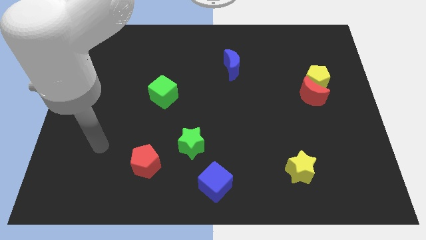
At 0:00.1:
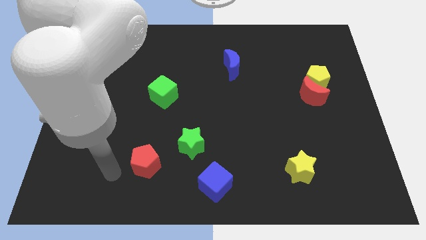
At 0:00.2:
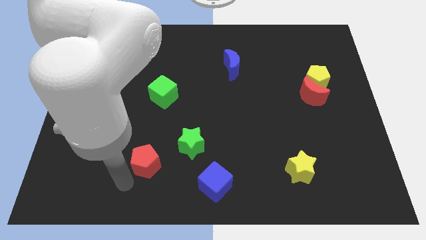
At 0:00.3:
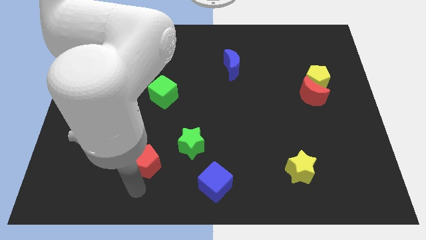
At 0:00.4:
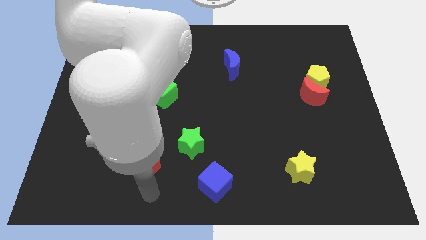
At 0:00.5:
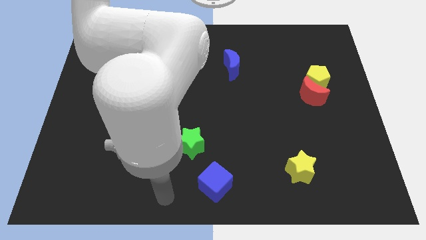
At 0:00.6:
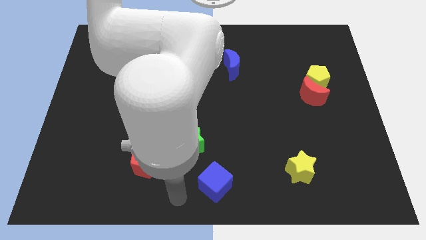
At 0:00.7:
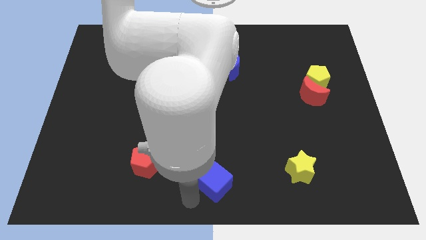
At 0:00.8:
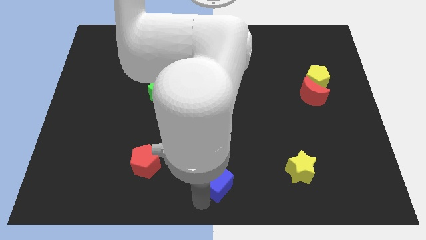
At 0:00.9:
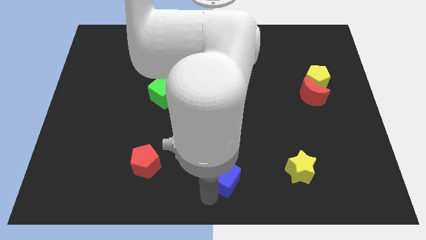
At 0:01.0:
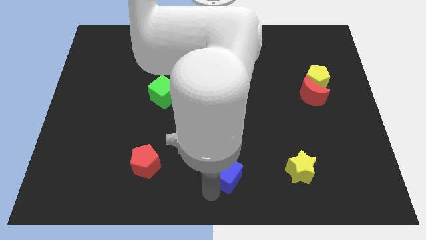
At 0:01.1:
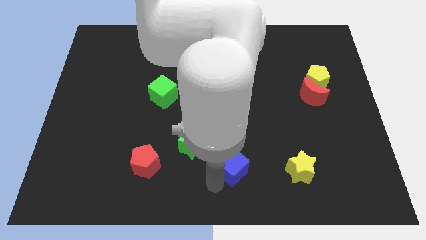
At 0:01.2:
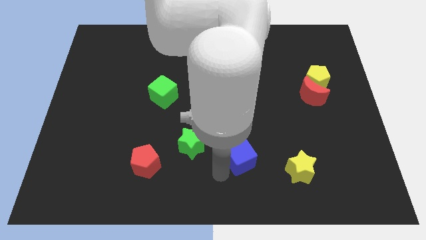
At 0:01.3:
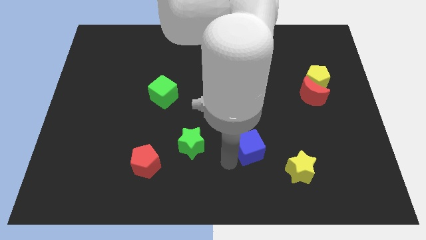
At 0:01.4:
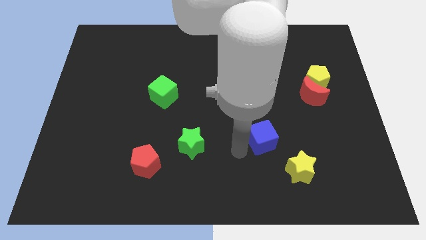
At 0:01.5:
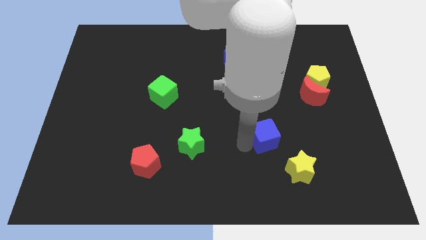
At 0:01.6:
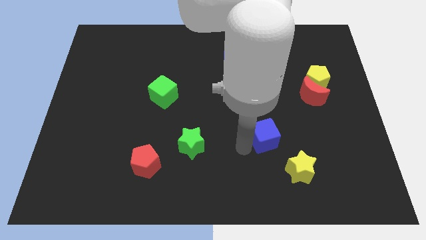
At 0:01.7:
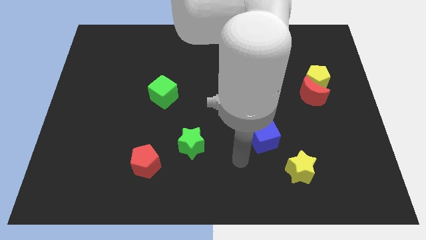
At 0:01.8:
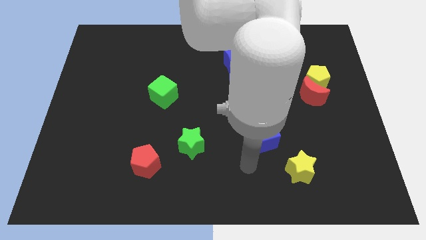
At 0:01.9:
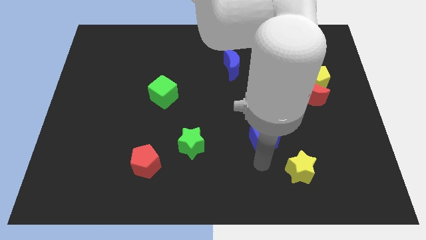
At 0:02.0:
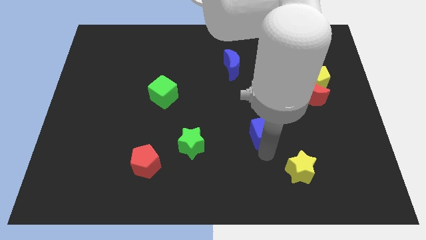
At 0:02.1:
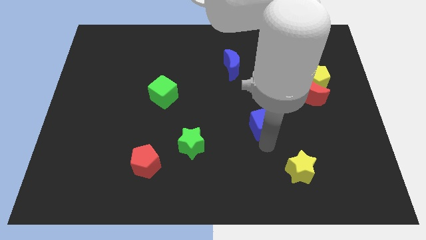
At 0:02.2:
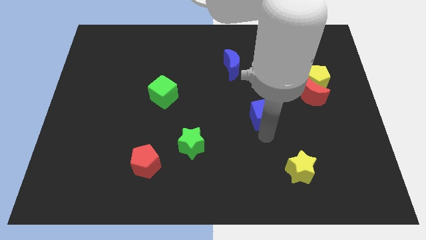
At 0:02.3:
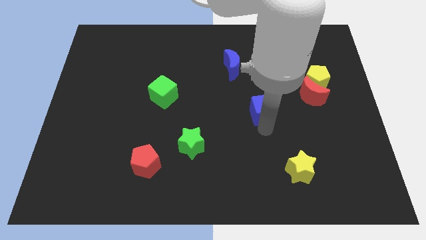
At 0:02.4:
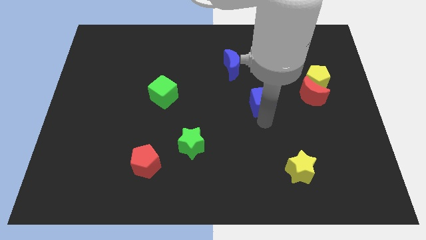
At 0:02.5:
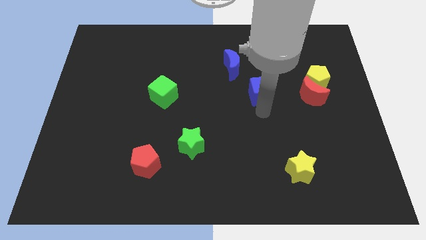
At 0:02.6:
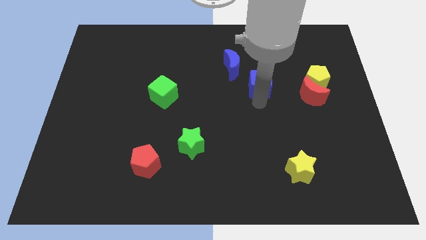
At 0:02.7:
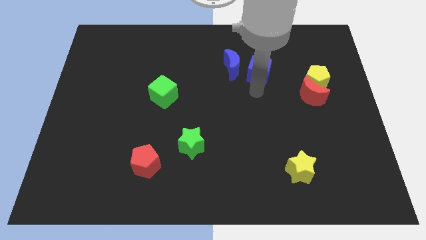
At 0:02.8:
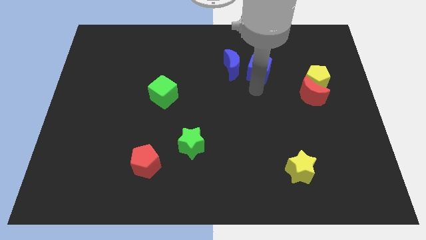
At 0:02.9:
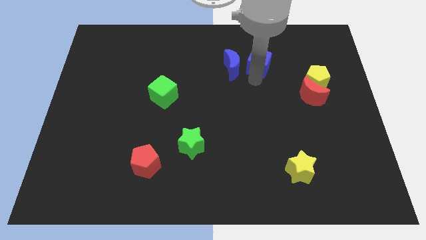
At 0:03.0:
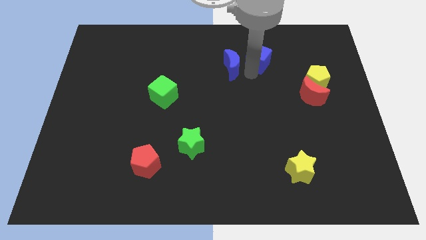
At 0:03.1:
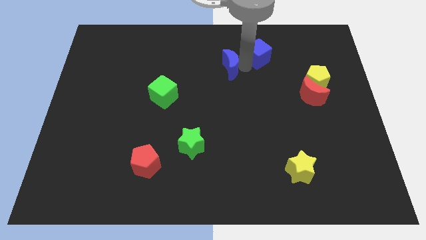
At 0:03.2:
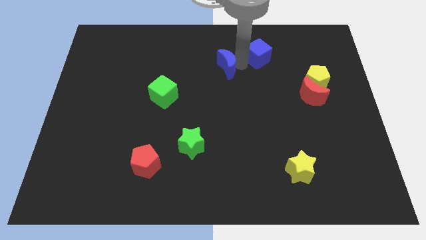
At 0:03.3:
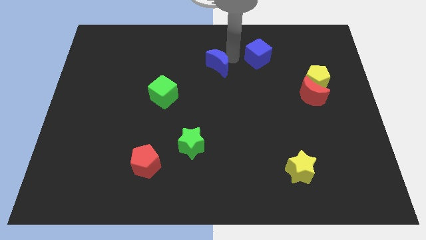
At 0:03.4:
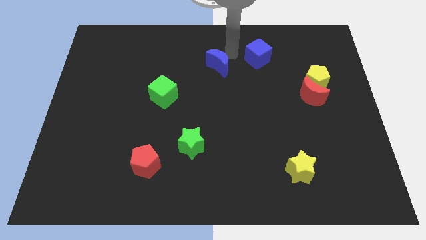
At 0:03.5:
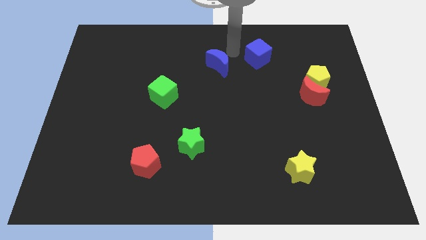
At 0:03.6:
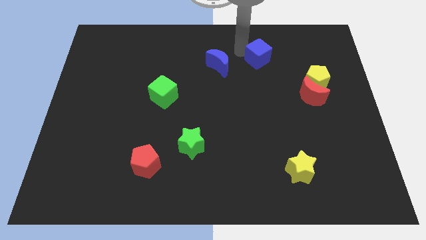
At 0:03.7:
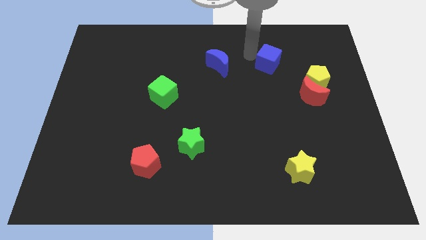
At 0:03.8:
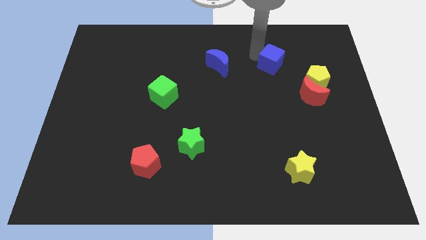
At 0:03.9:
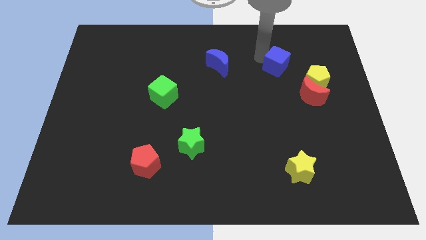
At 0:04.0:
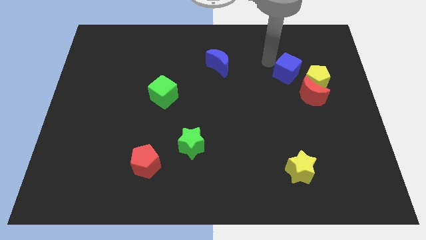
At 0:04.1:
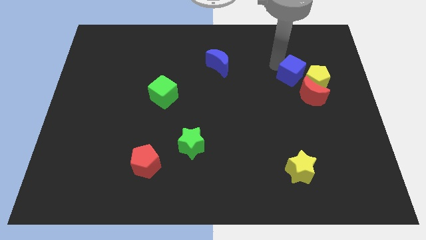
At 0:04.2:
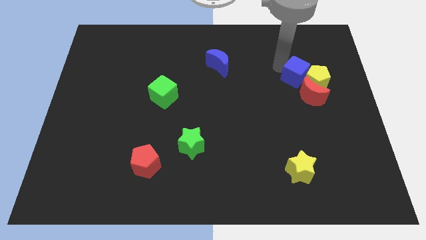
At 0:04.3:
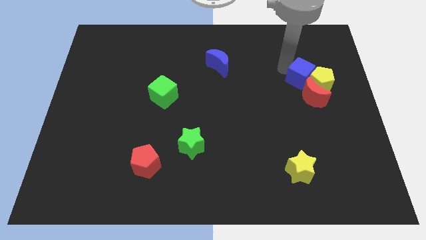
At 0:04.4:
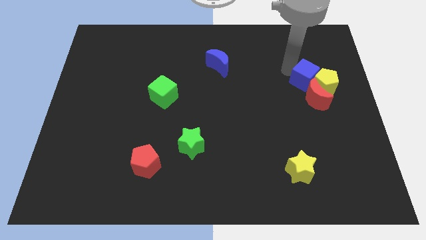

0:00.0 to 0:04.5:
put the blue cube next to the yellow pentagon

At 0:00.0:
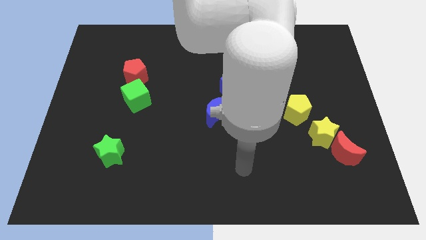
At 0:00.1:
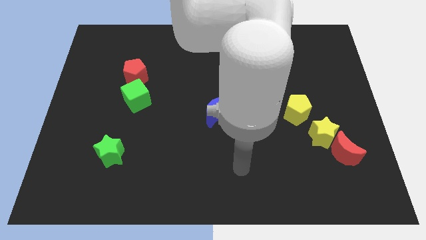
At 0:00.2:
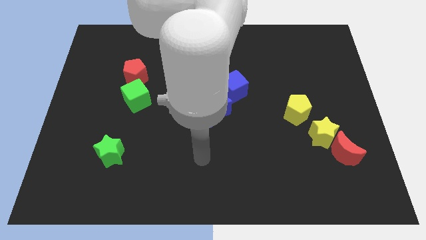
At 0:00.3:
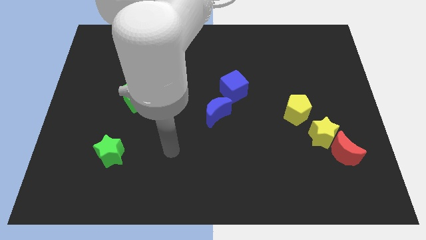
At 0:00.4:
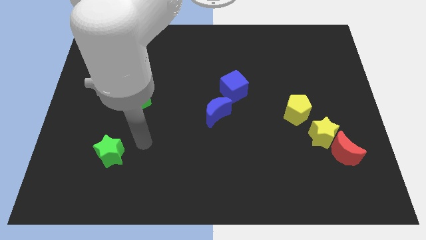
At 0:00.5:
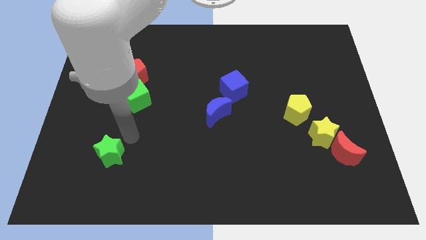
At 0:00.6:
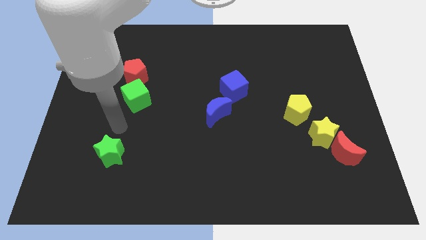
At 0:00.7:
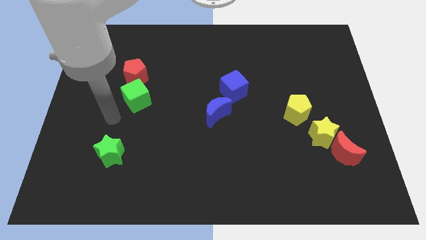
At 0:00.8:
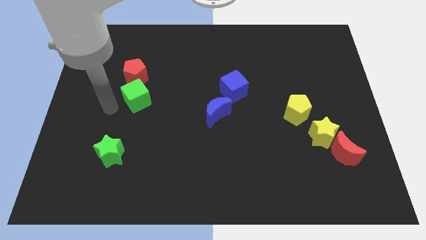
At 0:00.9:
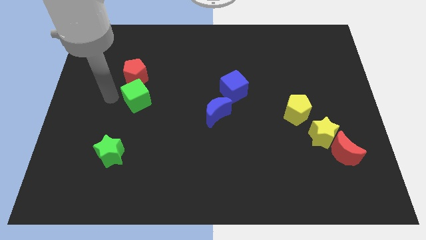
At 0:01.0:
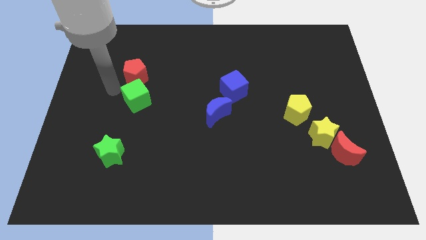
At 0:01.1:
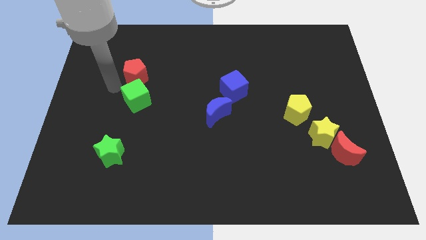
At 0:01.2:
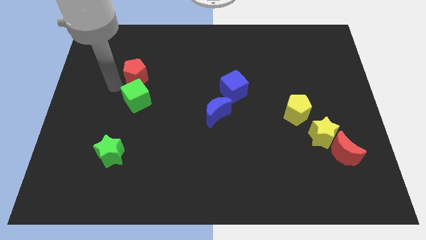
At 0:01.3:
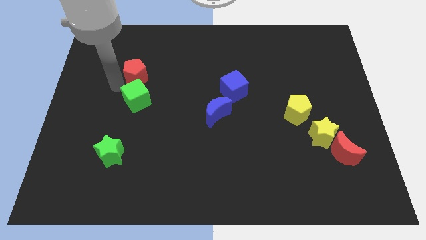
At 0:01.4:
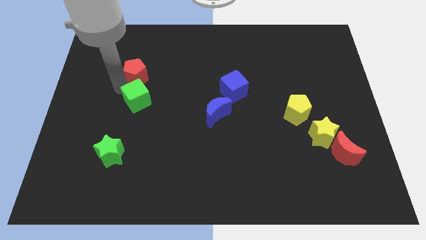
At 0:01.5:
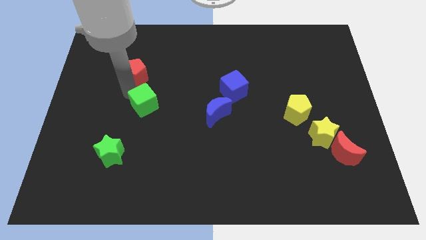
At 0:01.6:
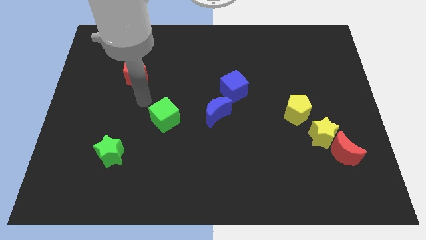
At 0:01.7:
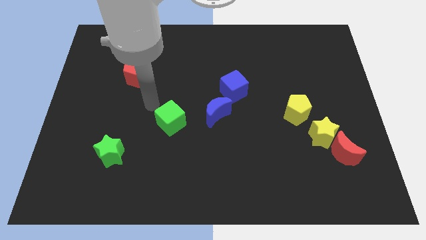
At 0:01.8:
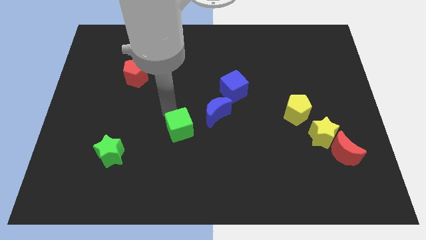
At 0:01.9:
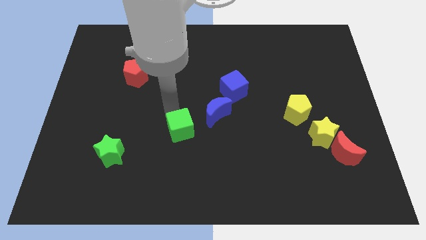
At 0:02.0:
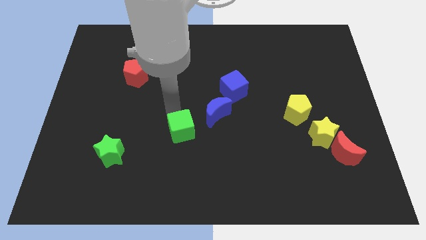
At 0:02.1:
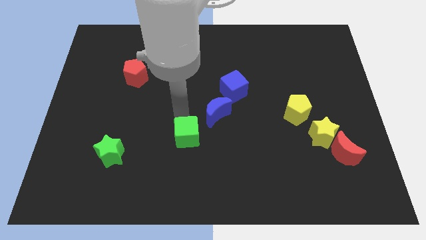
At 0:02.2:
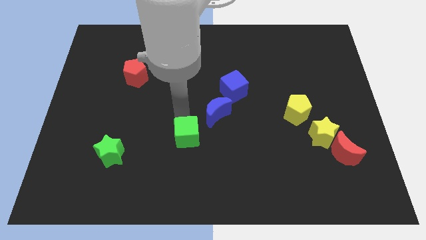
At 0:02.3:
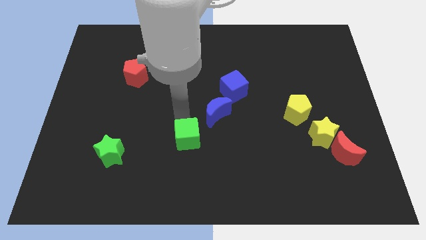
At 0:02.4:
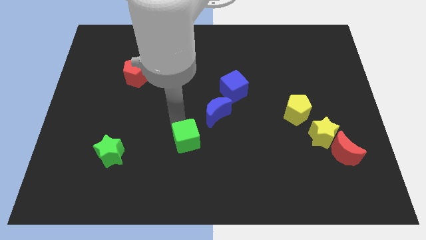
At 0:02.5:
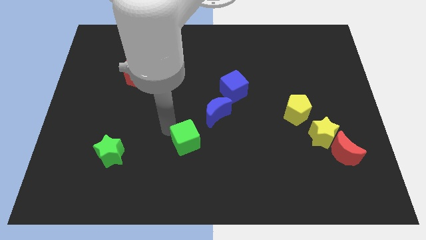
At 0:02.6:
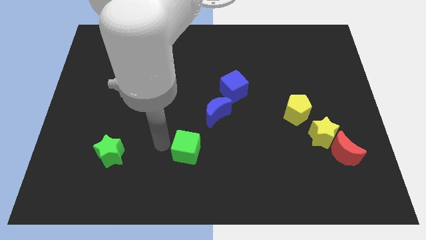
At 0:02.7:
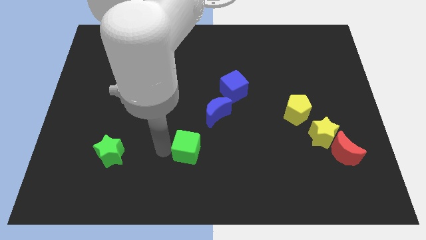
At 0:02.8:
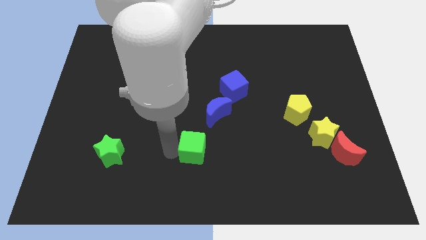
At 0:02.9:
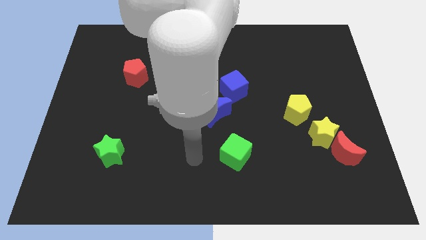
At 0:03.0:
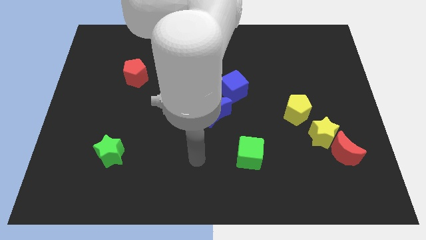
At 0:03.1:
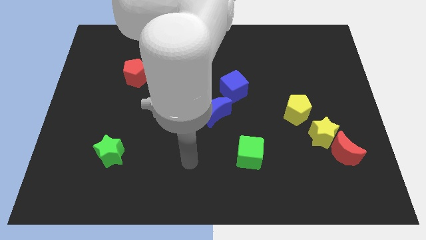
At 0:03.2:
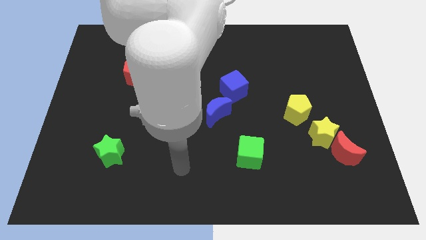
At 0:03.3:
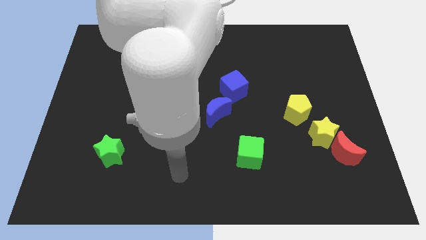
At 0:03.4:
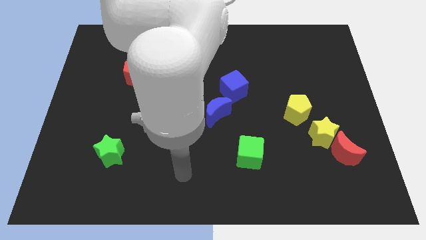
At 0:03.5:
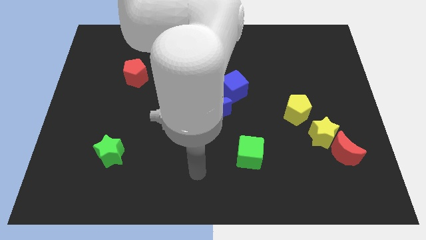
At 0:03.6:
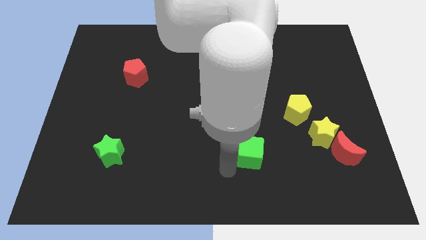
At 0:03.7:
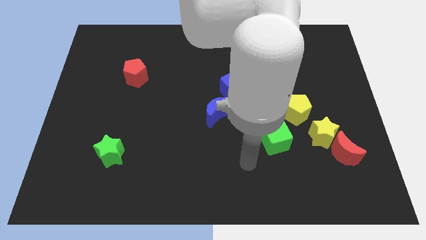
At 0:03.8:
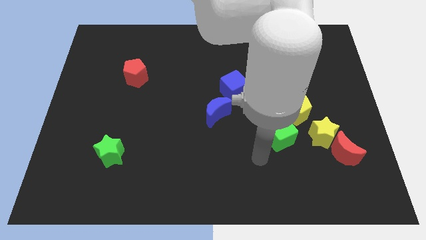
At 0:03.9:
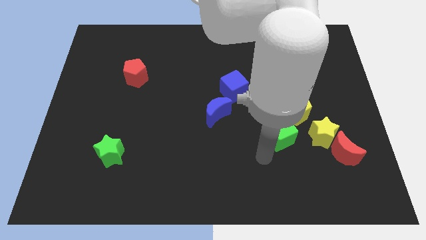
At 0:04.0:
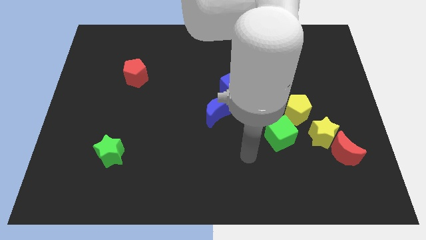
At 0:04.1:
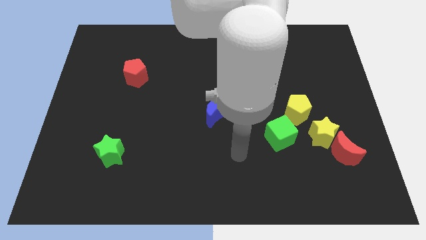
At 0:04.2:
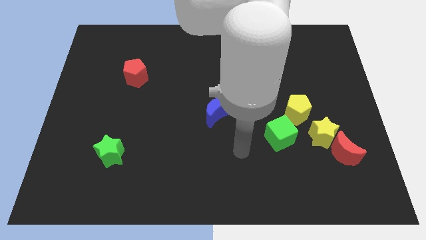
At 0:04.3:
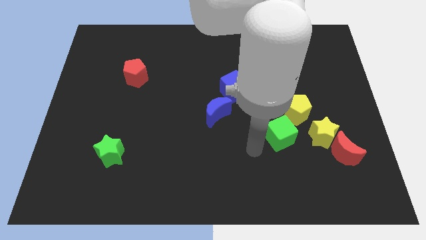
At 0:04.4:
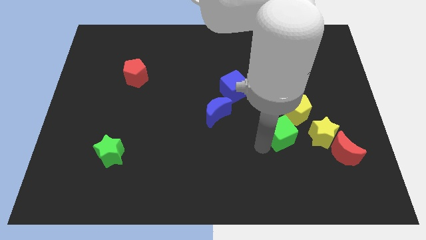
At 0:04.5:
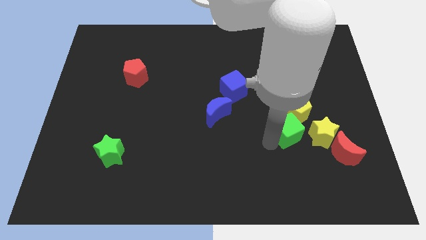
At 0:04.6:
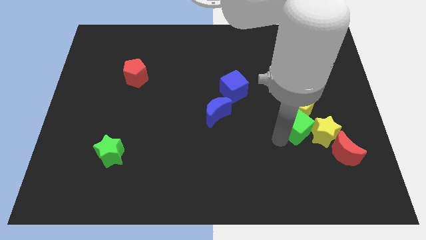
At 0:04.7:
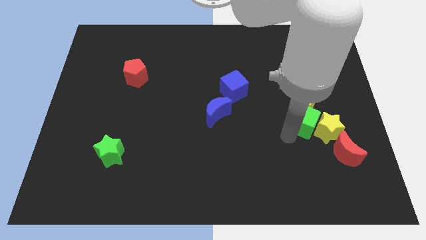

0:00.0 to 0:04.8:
move the green cube towards the yellow star
